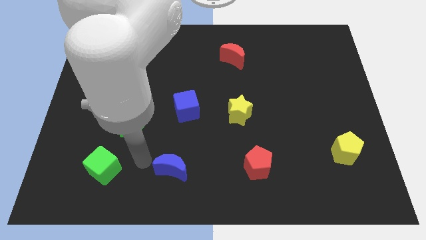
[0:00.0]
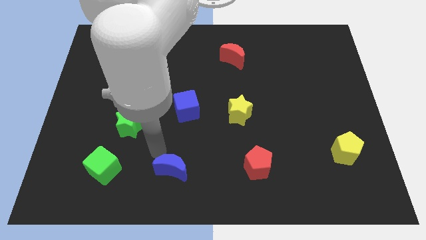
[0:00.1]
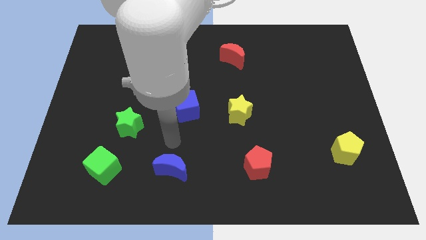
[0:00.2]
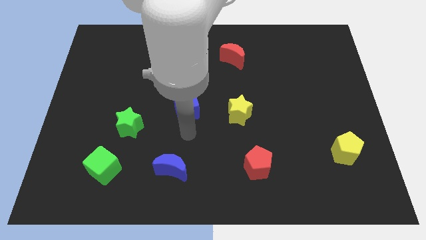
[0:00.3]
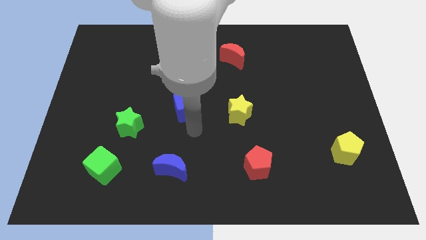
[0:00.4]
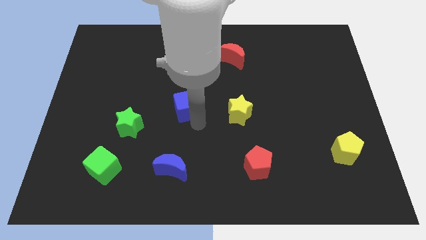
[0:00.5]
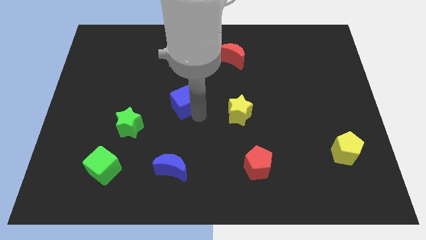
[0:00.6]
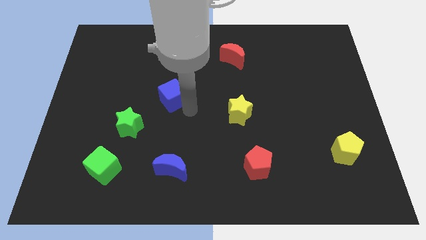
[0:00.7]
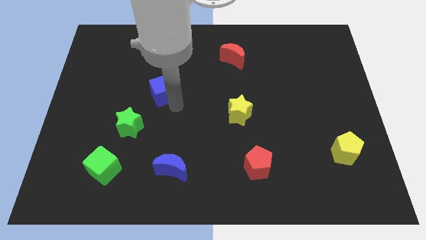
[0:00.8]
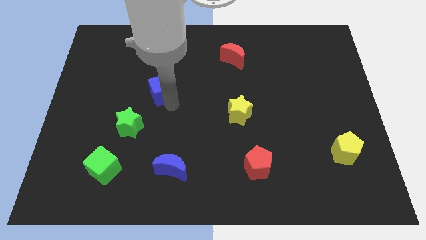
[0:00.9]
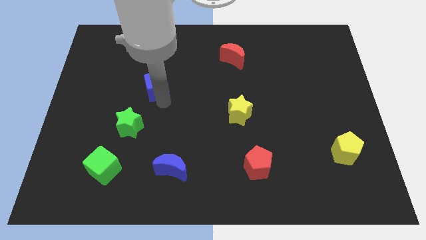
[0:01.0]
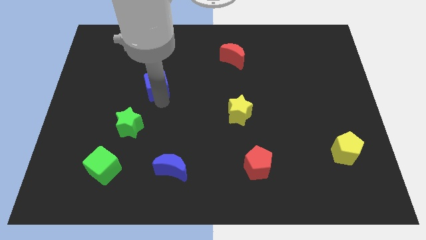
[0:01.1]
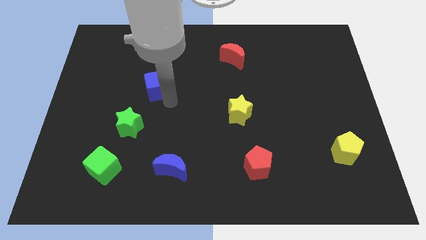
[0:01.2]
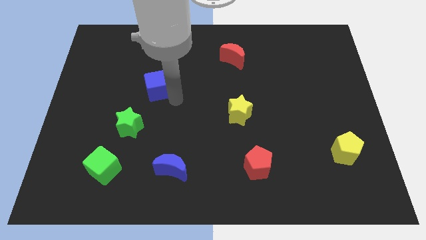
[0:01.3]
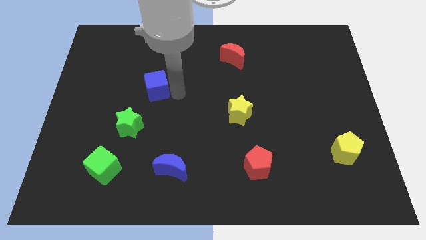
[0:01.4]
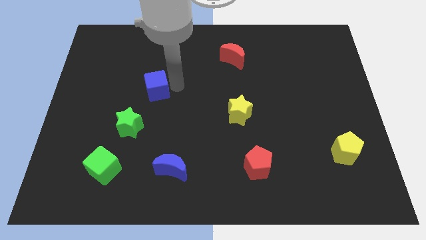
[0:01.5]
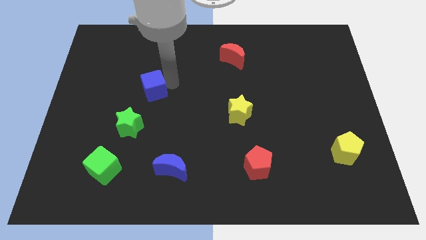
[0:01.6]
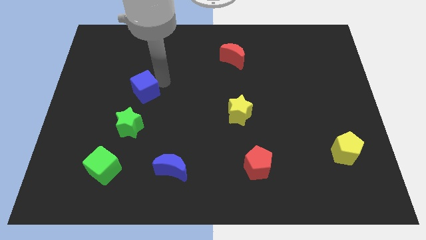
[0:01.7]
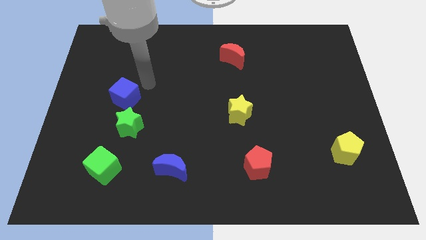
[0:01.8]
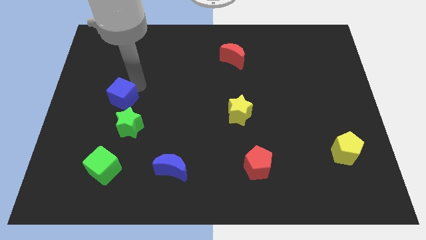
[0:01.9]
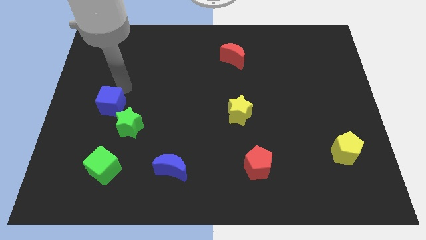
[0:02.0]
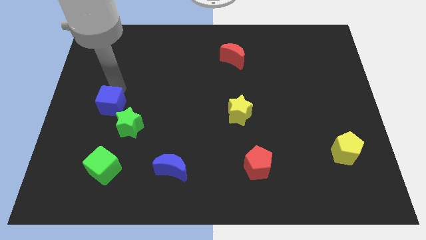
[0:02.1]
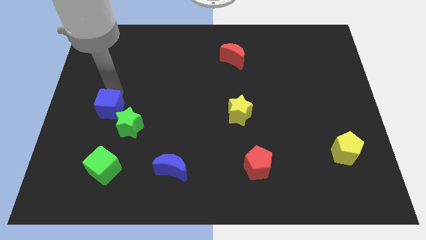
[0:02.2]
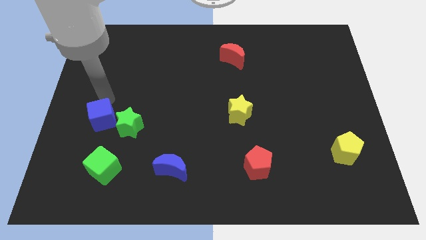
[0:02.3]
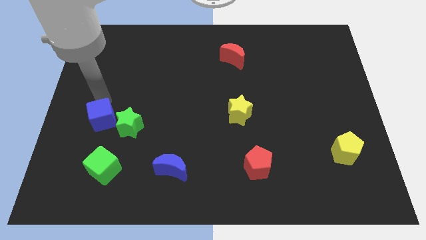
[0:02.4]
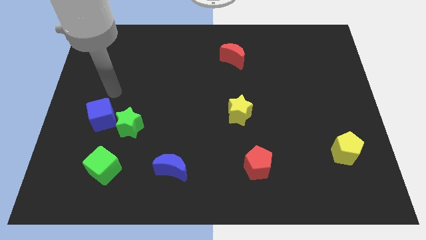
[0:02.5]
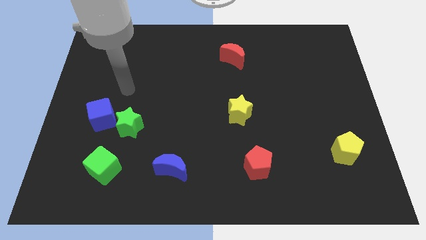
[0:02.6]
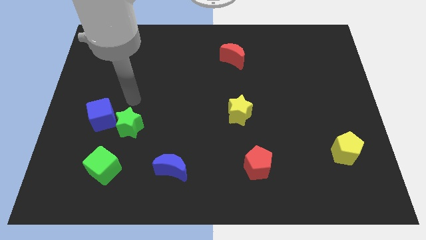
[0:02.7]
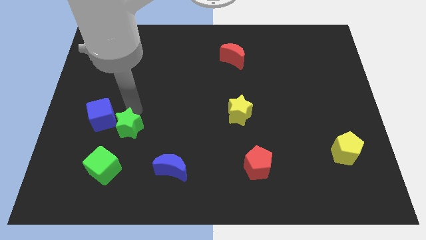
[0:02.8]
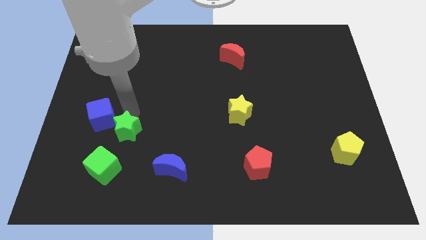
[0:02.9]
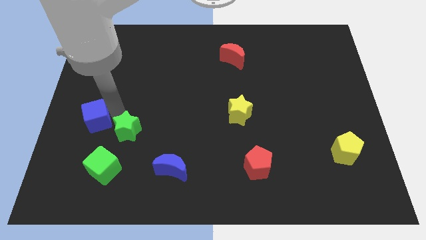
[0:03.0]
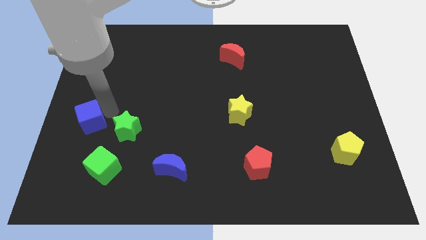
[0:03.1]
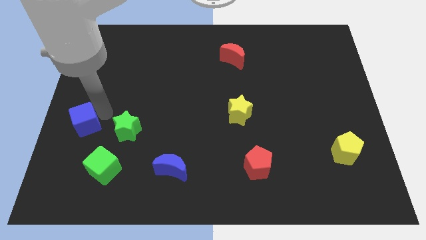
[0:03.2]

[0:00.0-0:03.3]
move the blue cube to the left of the green star

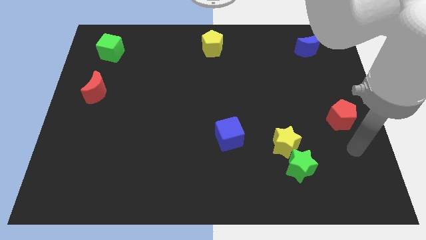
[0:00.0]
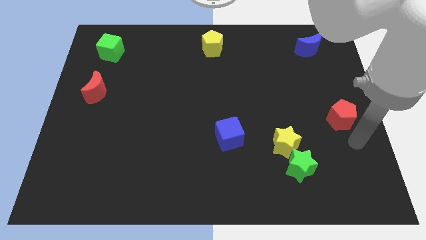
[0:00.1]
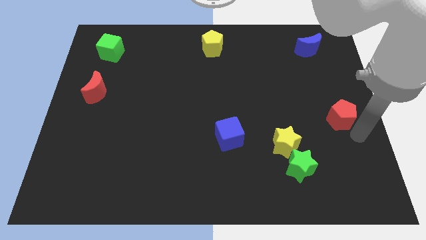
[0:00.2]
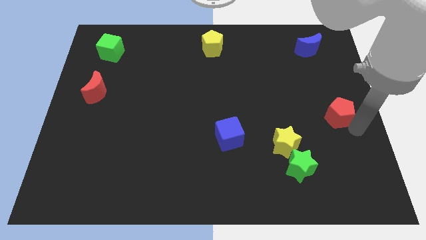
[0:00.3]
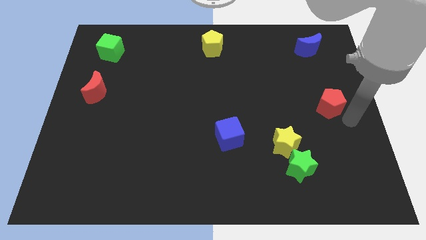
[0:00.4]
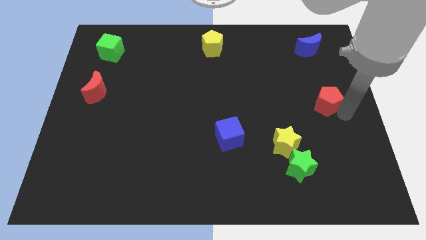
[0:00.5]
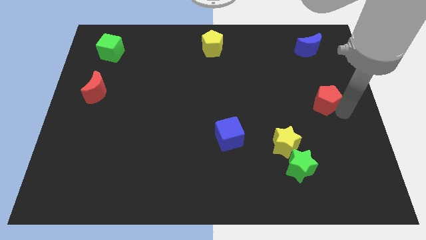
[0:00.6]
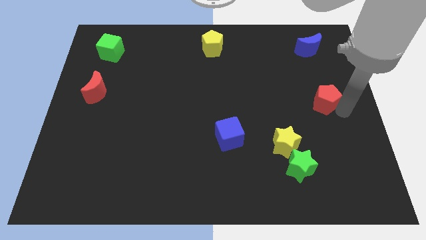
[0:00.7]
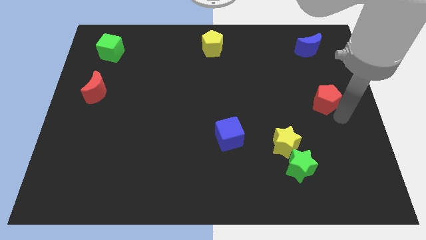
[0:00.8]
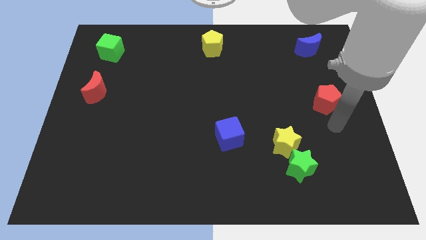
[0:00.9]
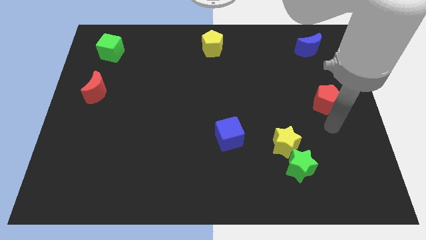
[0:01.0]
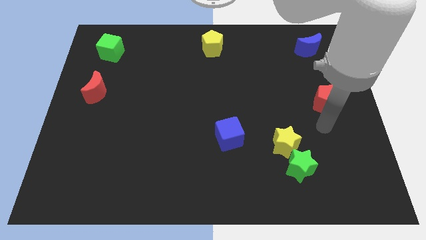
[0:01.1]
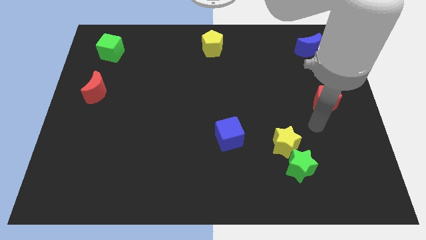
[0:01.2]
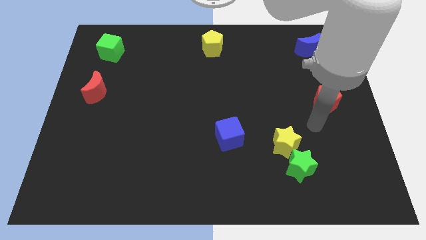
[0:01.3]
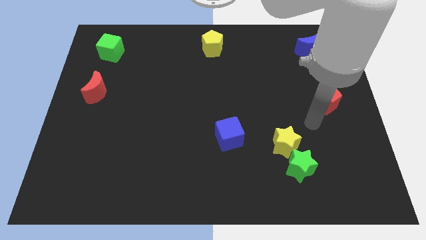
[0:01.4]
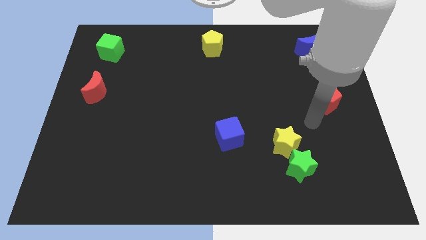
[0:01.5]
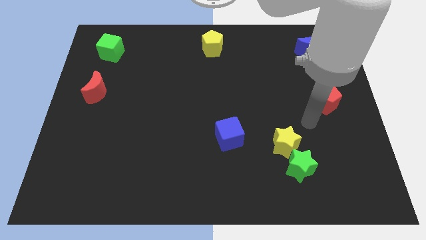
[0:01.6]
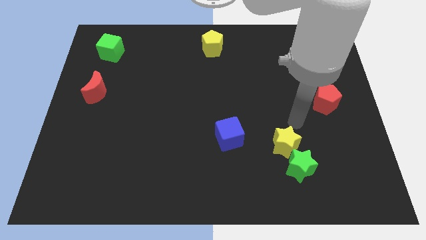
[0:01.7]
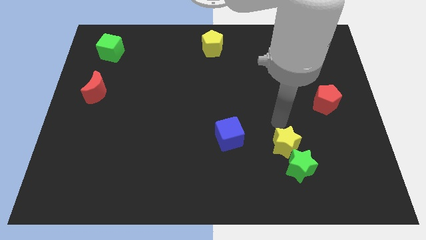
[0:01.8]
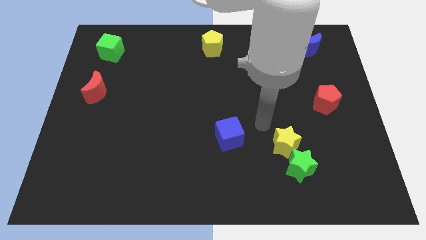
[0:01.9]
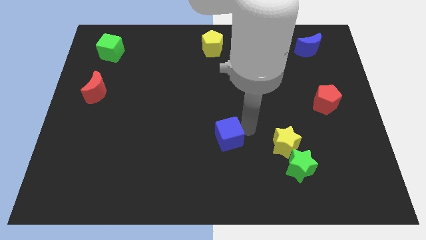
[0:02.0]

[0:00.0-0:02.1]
place your arm in between yellow star and blue cube

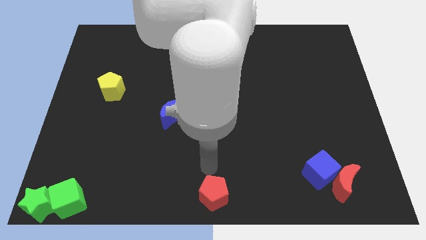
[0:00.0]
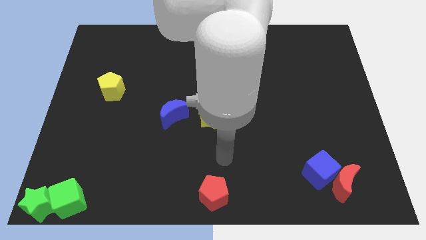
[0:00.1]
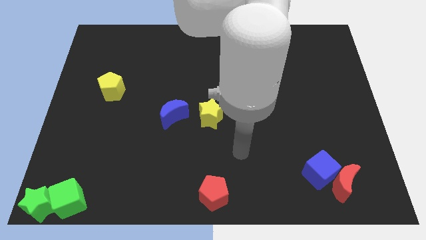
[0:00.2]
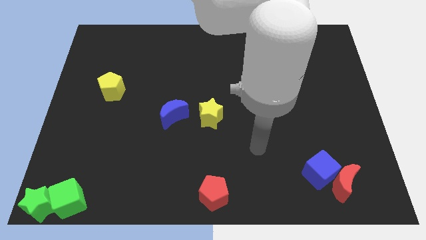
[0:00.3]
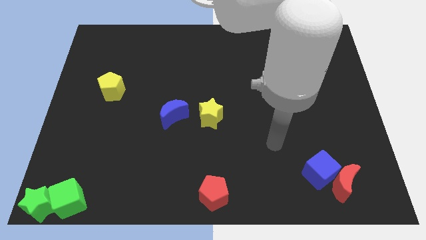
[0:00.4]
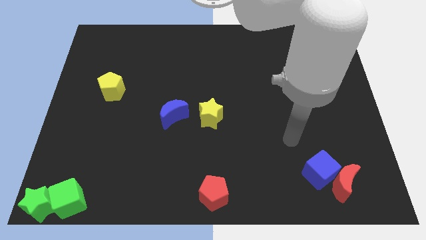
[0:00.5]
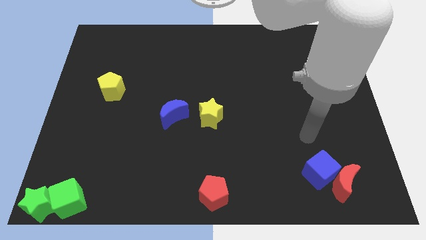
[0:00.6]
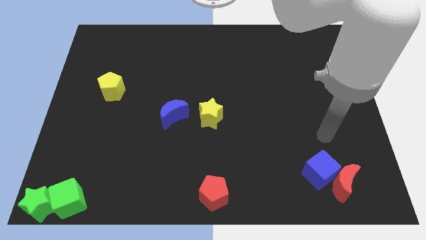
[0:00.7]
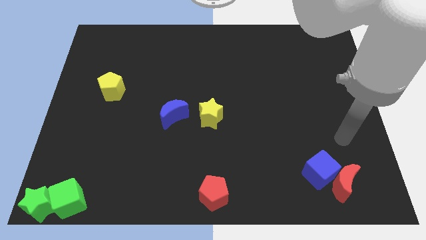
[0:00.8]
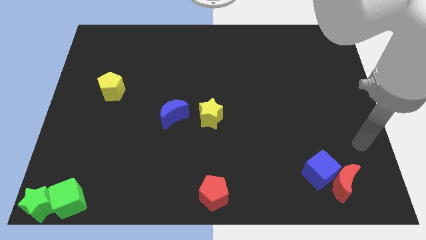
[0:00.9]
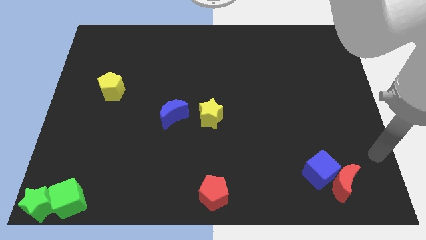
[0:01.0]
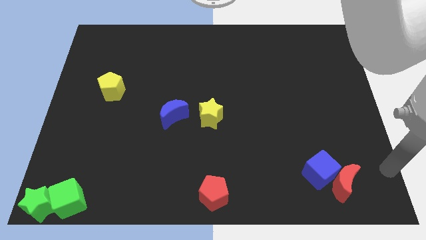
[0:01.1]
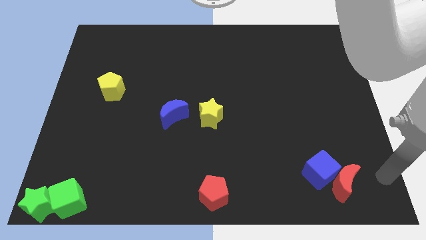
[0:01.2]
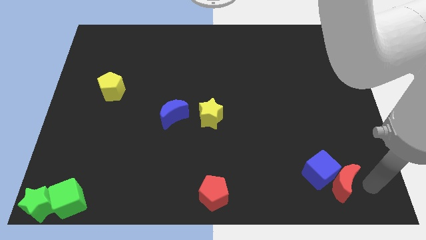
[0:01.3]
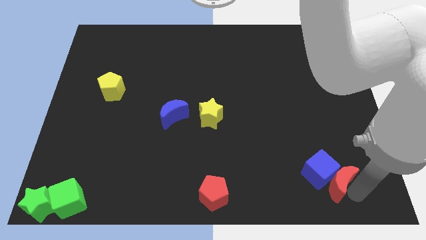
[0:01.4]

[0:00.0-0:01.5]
place your arm right to red moon

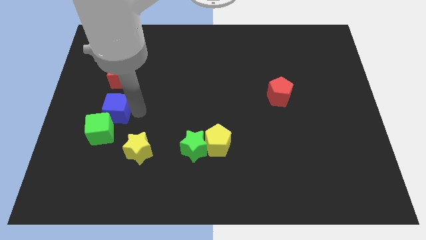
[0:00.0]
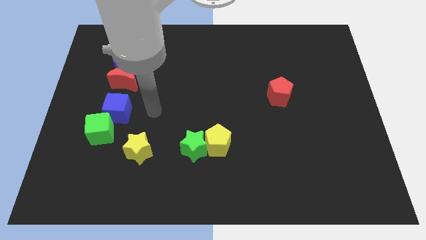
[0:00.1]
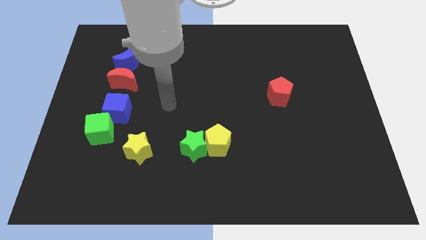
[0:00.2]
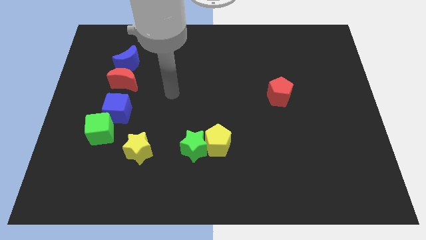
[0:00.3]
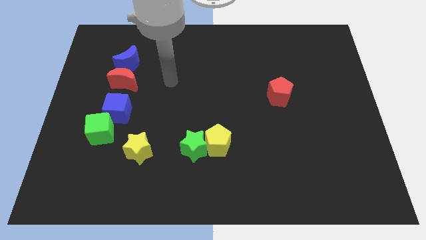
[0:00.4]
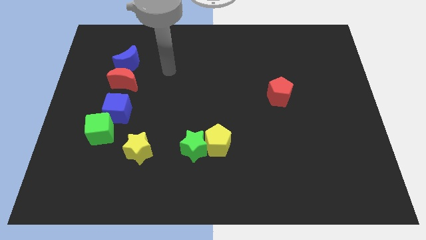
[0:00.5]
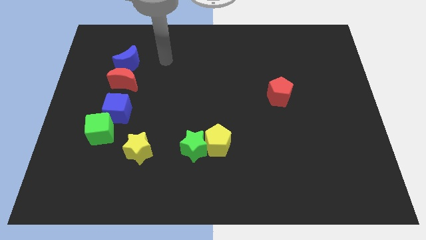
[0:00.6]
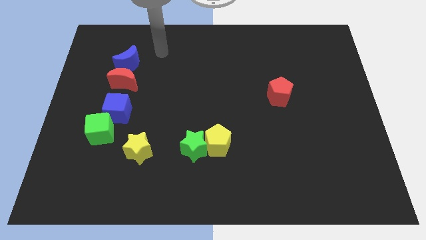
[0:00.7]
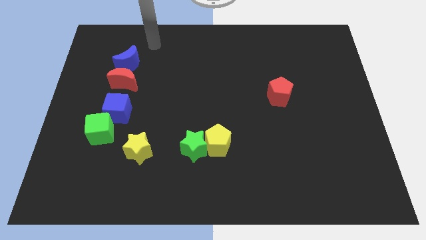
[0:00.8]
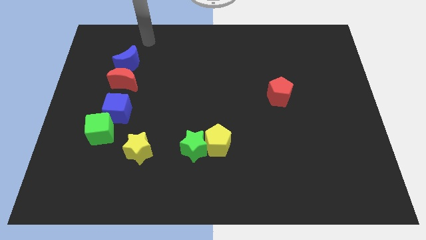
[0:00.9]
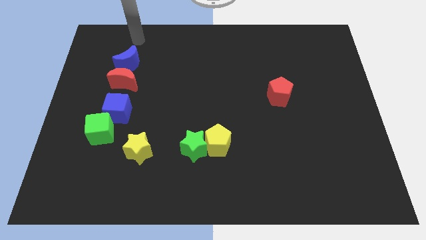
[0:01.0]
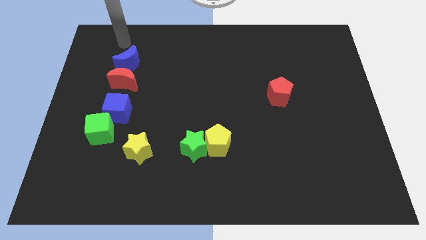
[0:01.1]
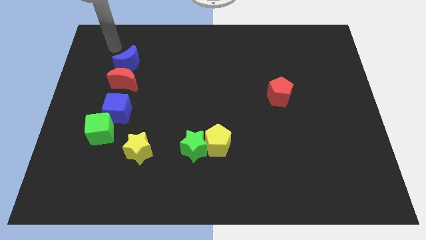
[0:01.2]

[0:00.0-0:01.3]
place your arm above blue crescent

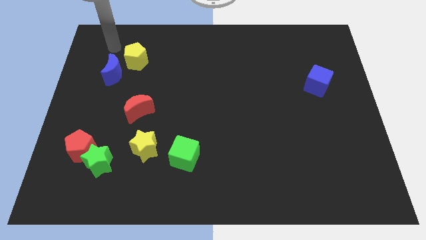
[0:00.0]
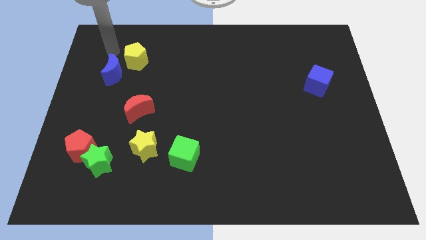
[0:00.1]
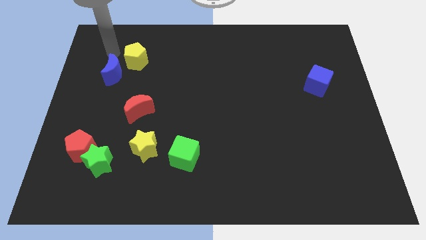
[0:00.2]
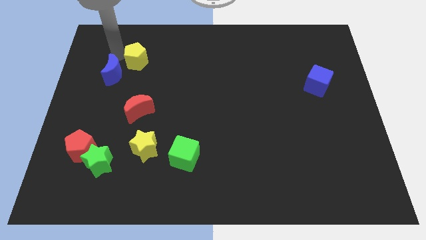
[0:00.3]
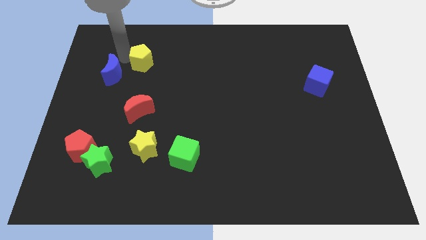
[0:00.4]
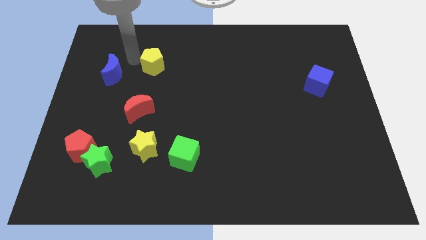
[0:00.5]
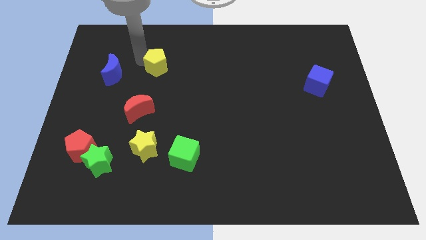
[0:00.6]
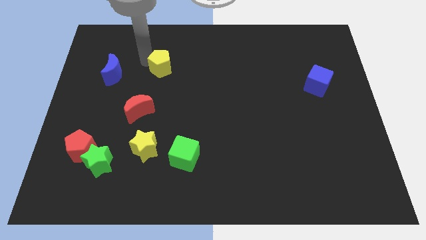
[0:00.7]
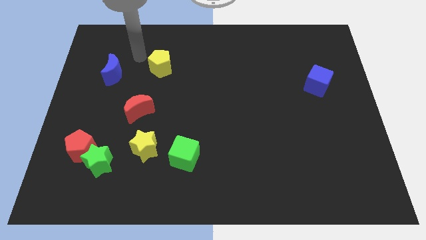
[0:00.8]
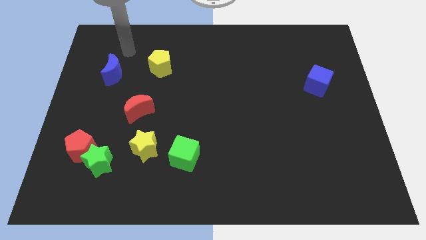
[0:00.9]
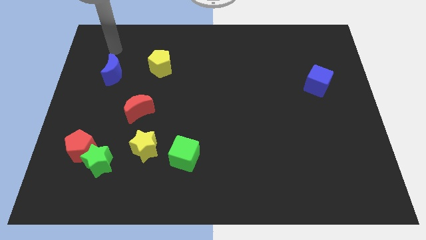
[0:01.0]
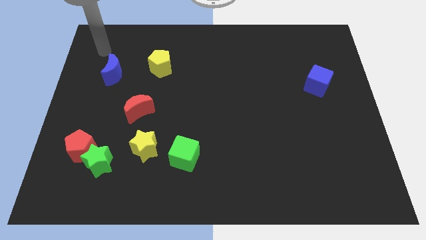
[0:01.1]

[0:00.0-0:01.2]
place yellow pentagon to the right of blue moon
